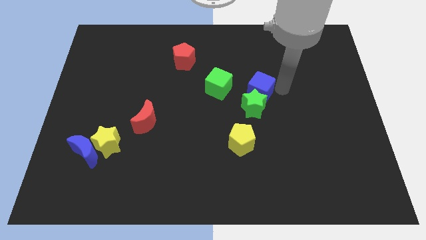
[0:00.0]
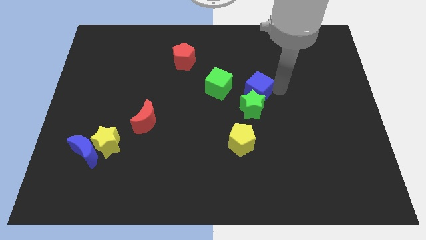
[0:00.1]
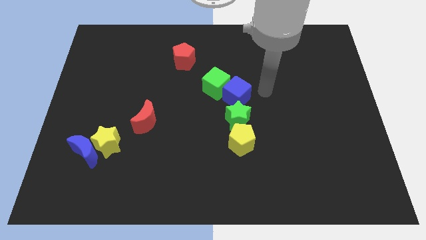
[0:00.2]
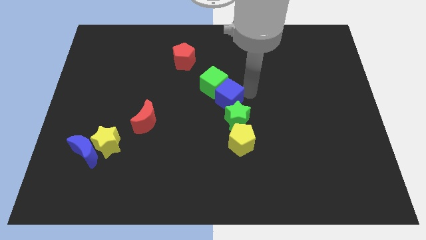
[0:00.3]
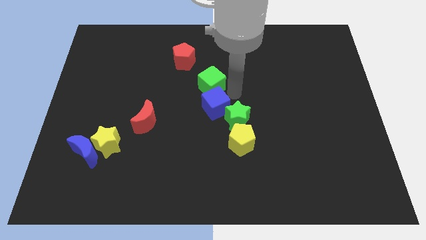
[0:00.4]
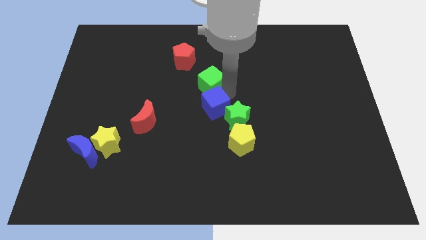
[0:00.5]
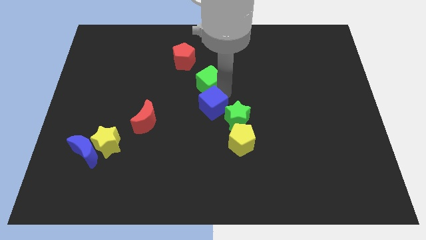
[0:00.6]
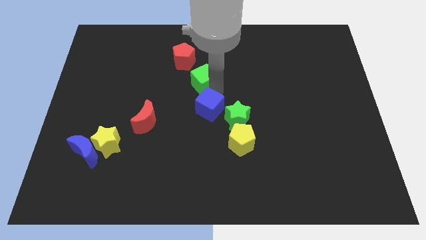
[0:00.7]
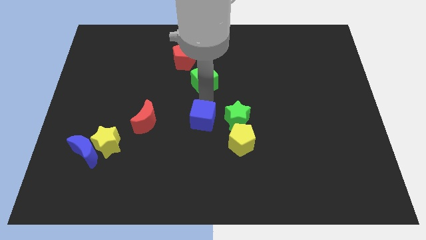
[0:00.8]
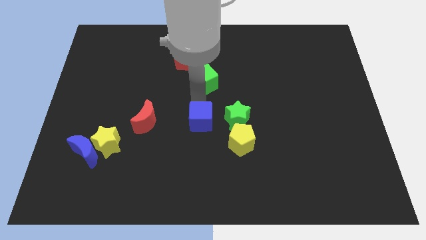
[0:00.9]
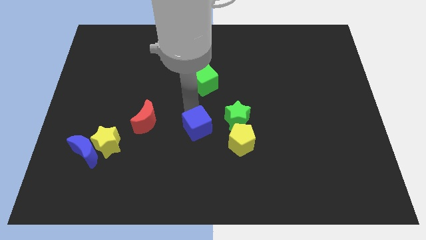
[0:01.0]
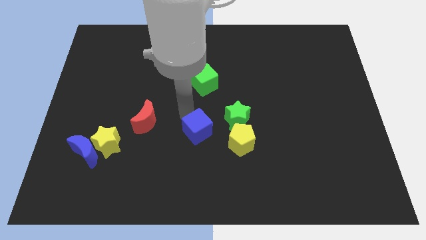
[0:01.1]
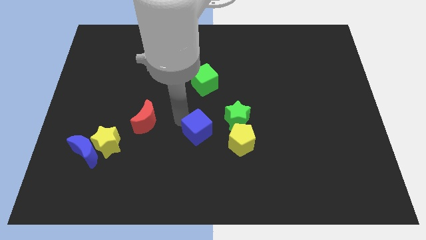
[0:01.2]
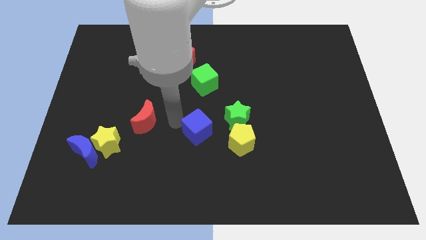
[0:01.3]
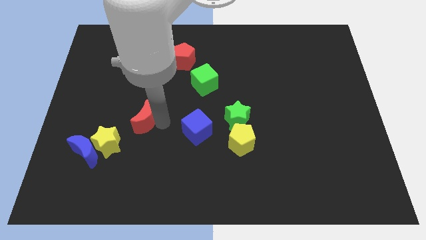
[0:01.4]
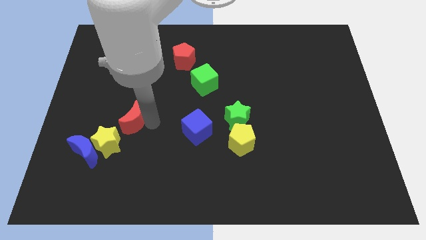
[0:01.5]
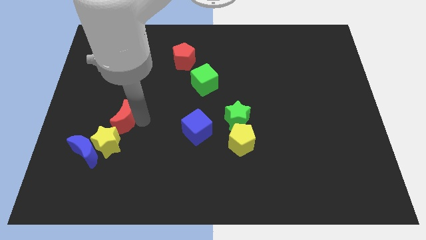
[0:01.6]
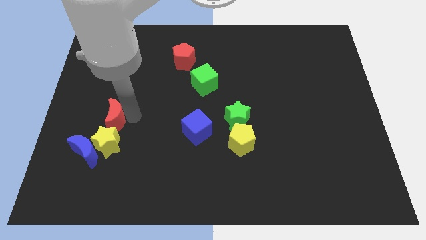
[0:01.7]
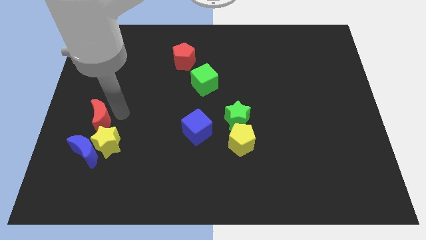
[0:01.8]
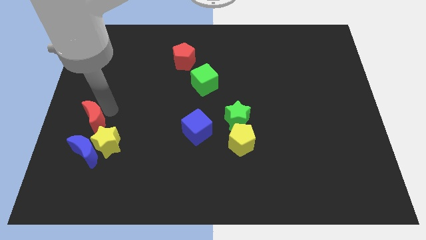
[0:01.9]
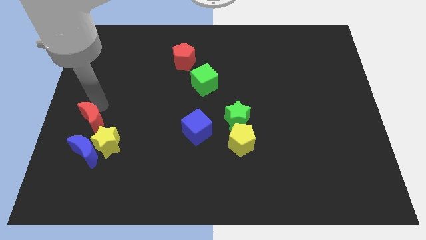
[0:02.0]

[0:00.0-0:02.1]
push the blue cube to the bottom center of the board

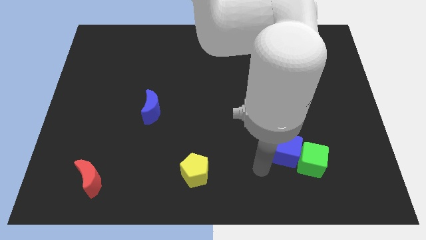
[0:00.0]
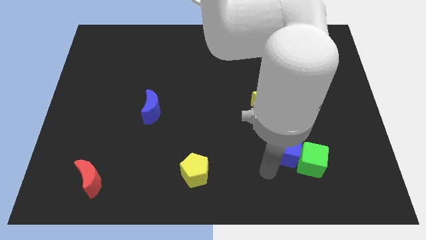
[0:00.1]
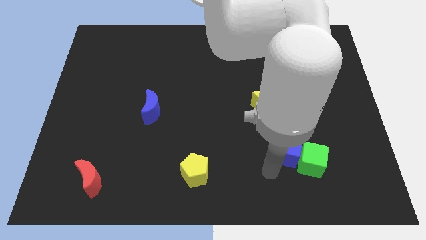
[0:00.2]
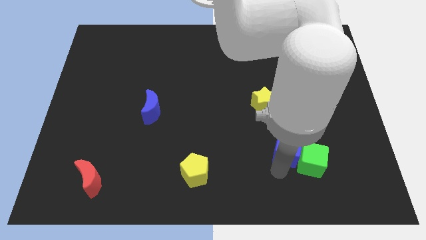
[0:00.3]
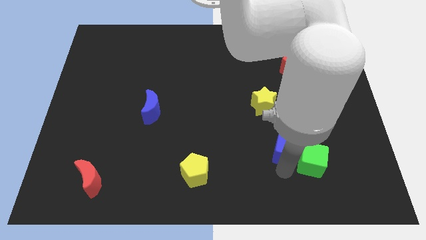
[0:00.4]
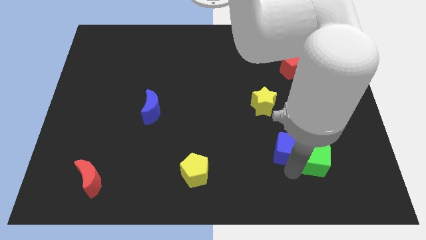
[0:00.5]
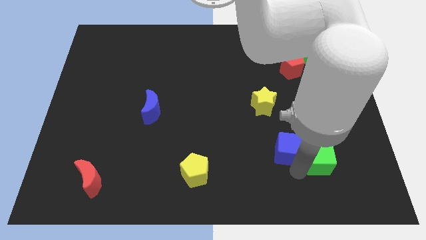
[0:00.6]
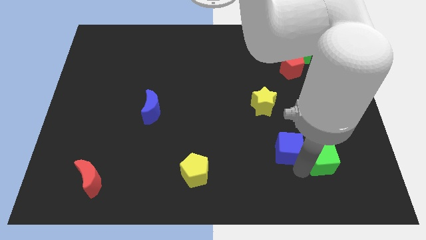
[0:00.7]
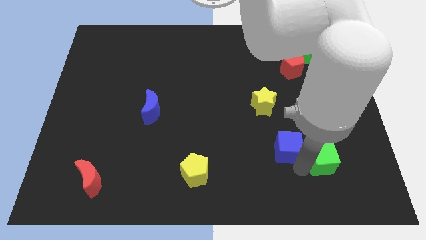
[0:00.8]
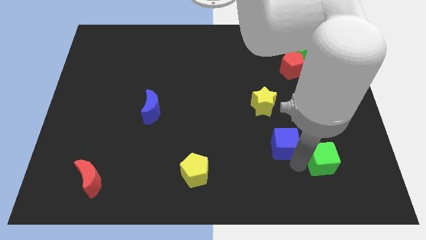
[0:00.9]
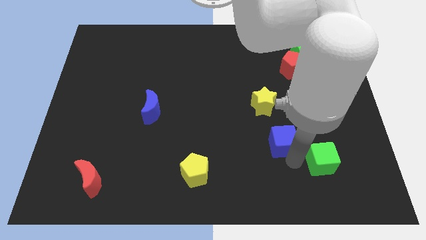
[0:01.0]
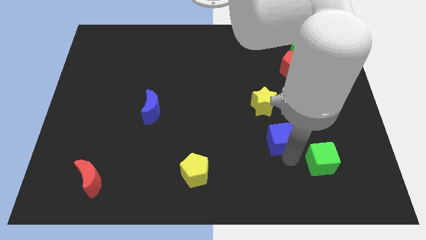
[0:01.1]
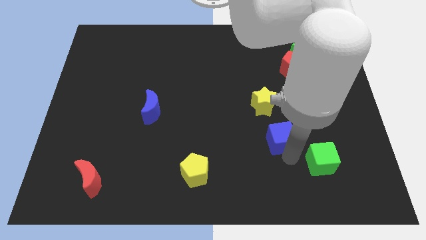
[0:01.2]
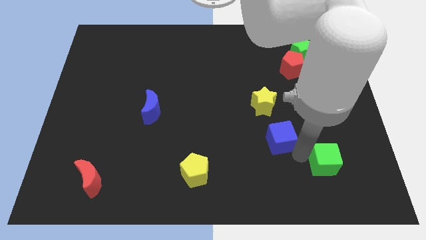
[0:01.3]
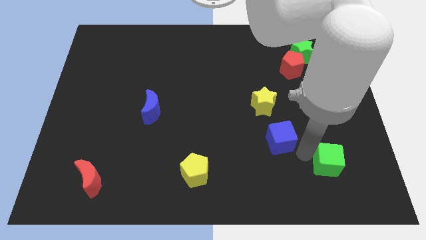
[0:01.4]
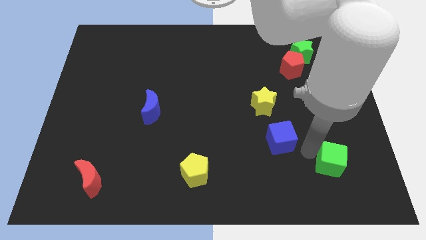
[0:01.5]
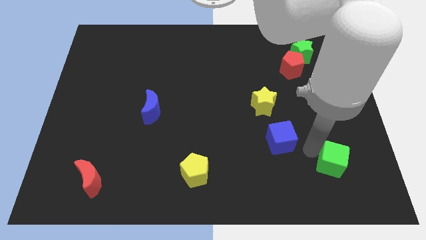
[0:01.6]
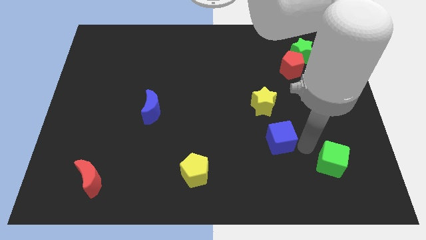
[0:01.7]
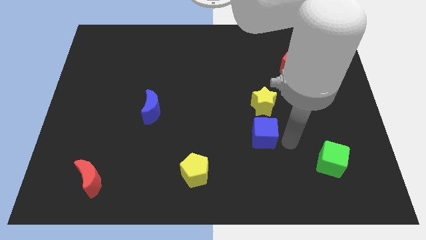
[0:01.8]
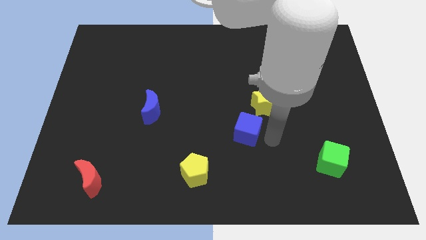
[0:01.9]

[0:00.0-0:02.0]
separate the blue cube and green cube to each other

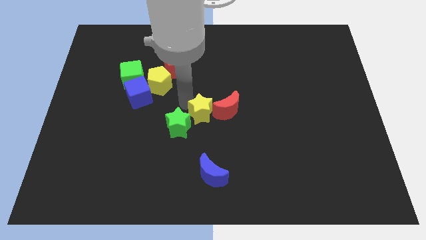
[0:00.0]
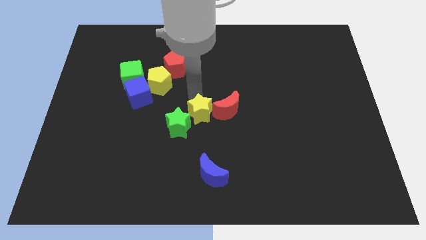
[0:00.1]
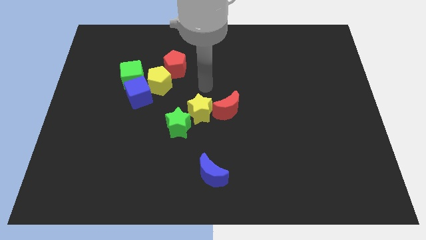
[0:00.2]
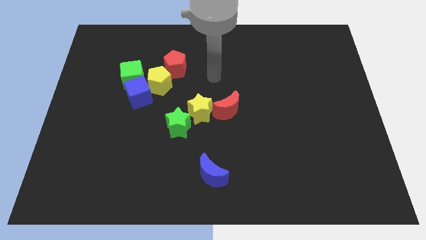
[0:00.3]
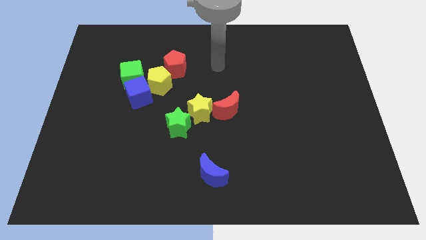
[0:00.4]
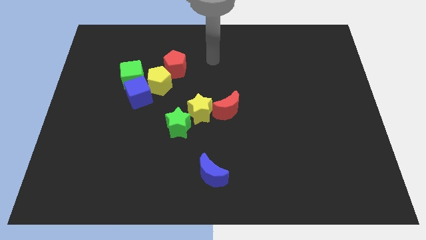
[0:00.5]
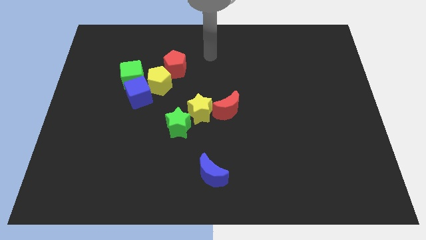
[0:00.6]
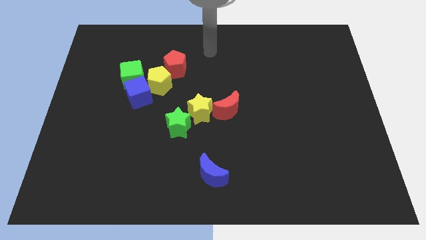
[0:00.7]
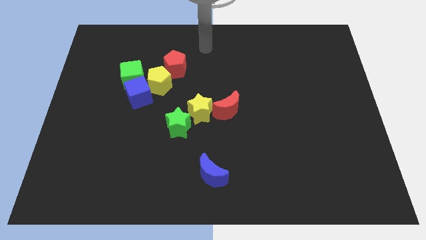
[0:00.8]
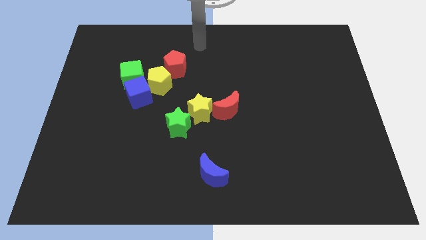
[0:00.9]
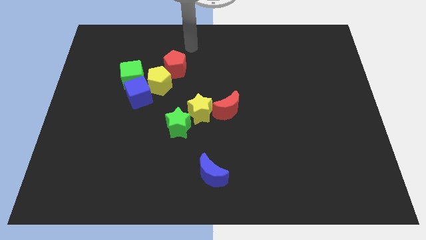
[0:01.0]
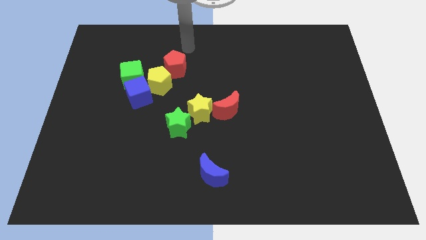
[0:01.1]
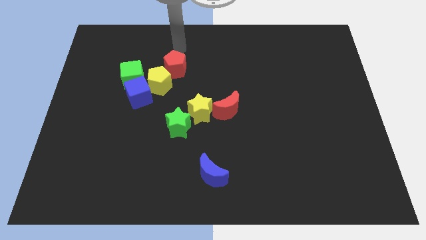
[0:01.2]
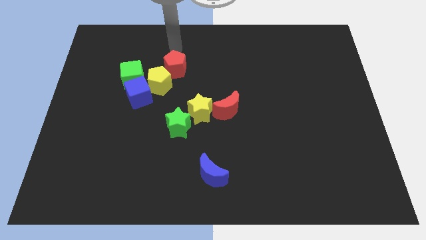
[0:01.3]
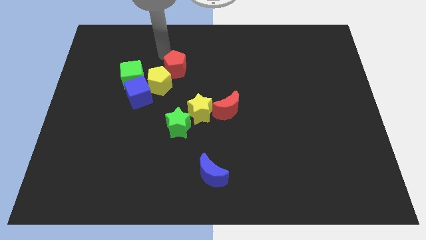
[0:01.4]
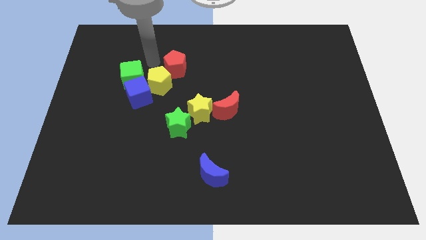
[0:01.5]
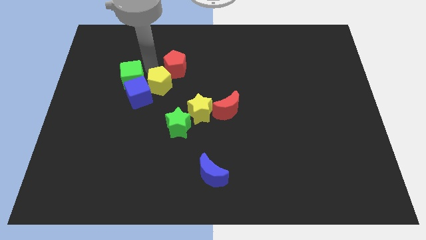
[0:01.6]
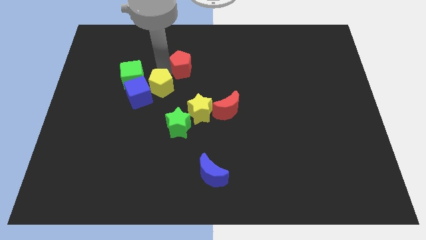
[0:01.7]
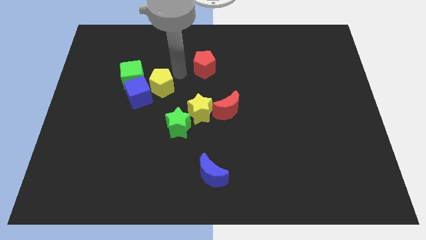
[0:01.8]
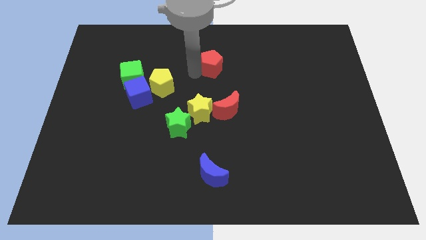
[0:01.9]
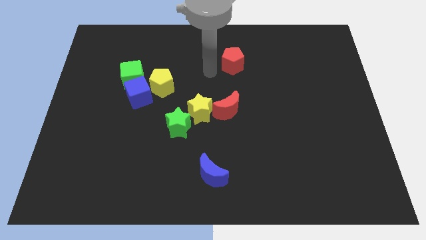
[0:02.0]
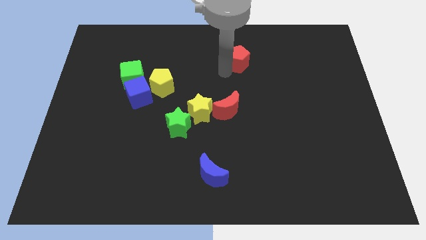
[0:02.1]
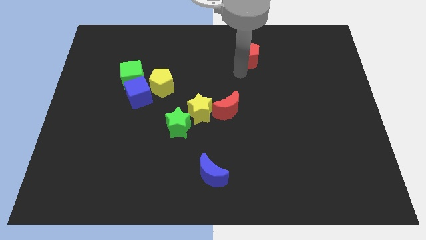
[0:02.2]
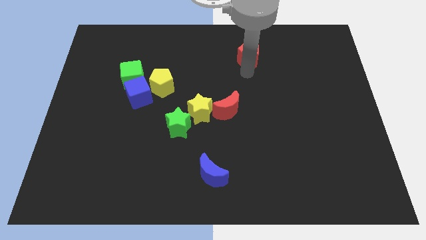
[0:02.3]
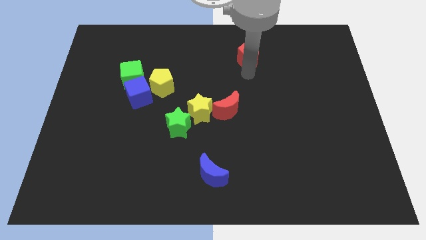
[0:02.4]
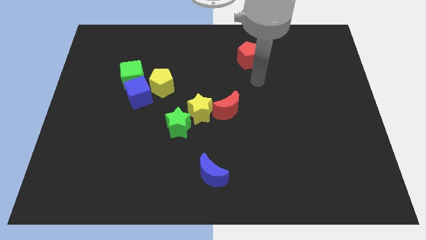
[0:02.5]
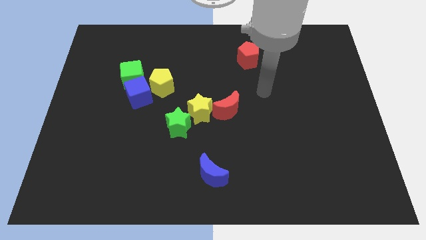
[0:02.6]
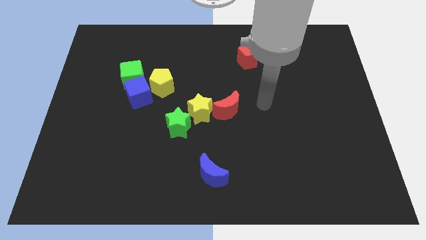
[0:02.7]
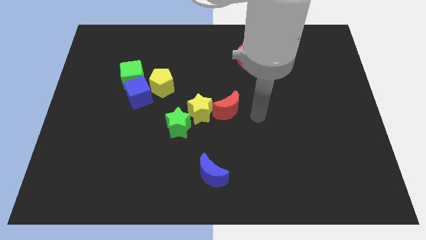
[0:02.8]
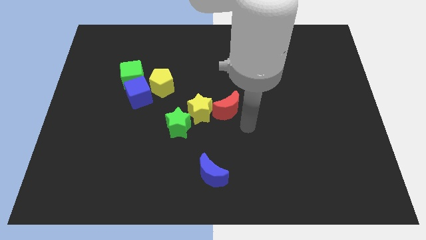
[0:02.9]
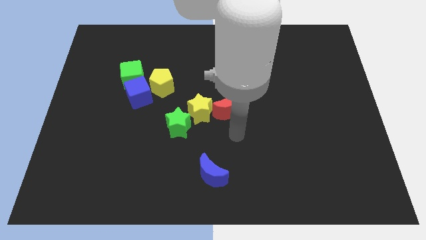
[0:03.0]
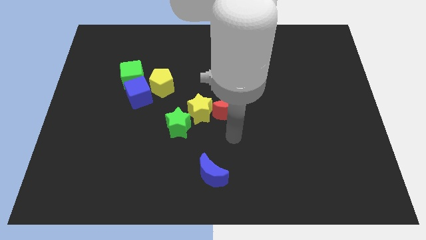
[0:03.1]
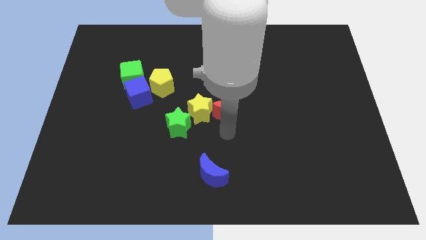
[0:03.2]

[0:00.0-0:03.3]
separate the red pentagon from the group of blocks

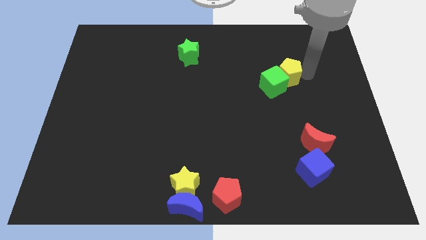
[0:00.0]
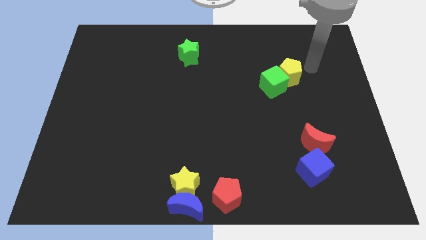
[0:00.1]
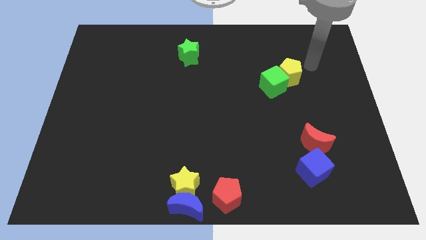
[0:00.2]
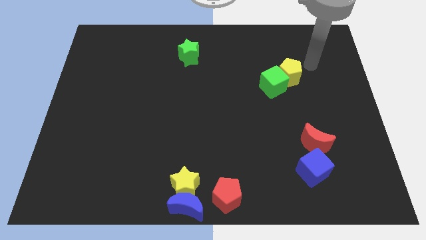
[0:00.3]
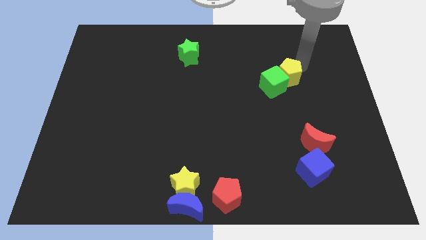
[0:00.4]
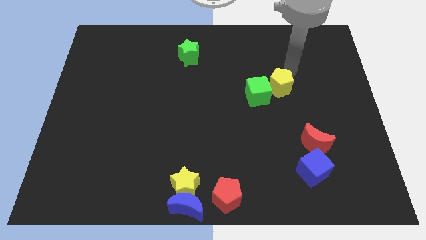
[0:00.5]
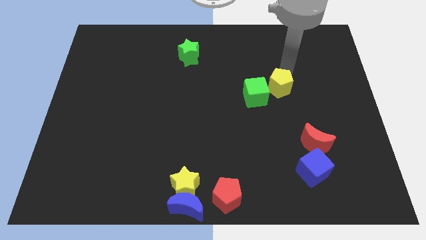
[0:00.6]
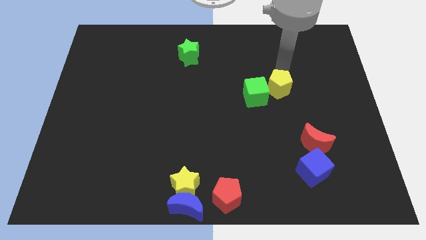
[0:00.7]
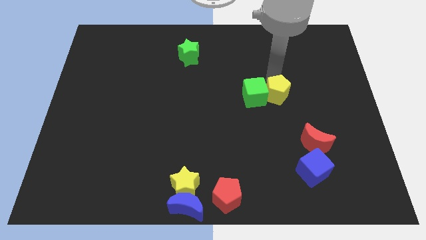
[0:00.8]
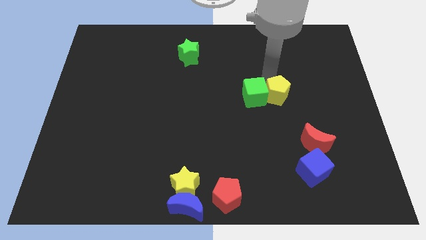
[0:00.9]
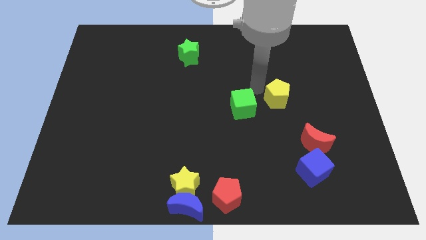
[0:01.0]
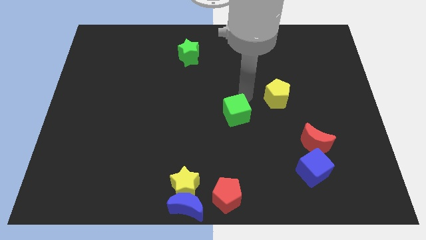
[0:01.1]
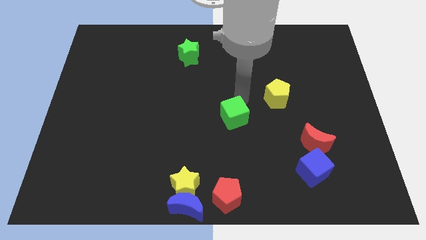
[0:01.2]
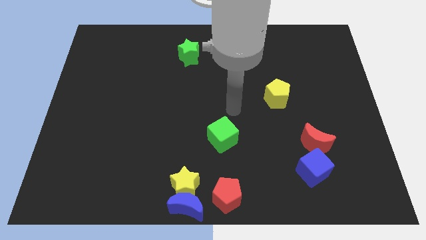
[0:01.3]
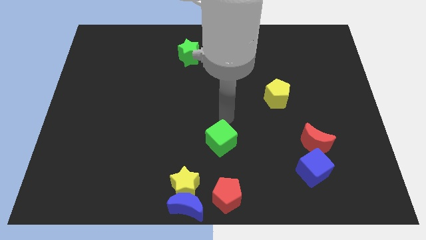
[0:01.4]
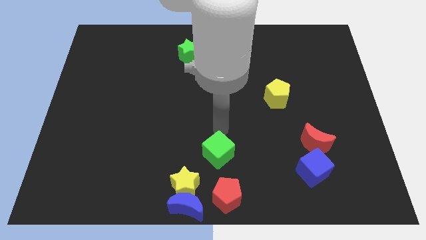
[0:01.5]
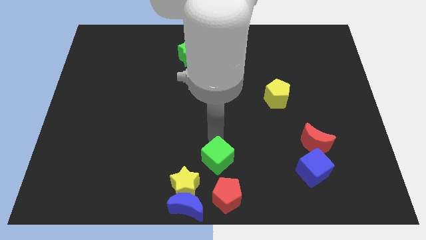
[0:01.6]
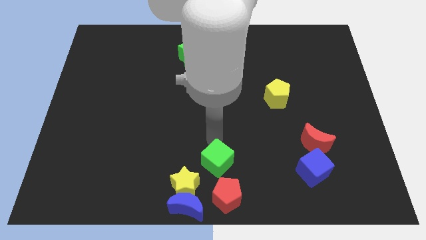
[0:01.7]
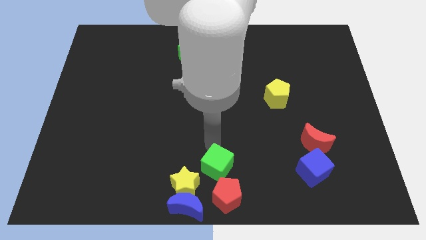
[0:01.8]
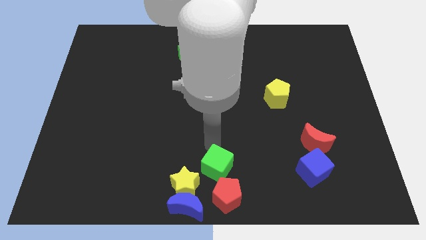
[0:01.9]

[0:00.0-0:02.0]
push the green cube towards the red pentagon
